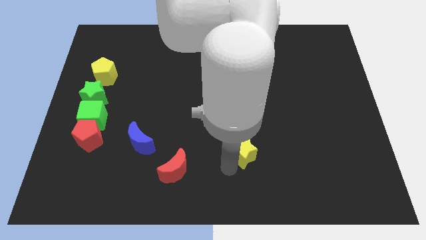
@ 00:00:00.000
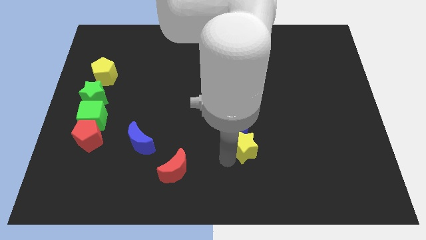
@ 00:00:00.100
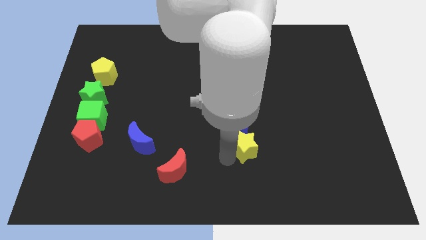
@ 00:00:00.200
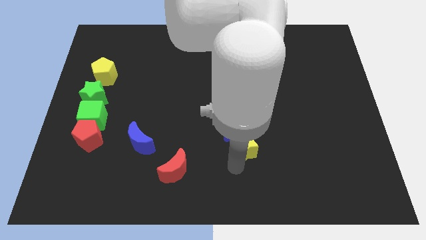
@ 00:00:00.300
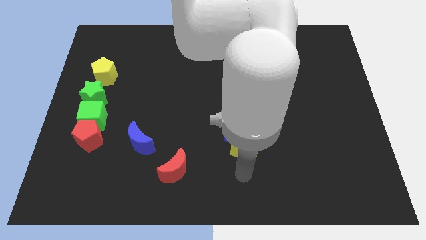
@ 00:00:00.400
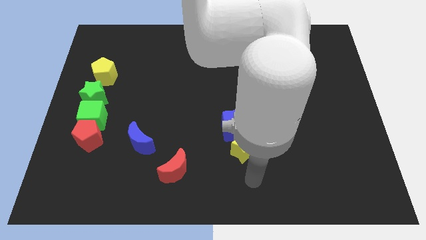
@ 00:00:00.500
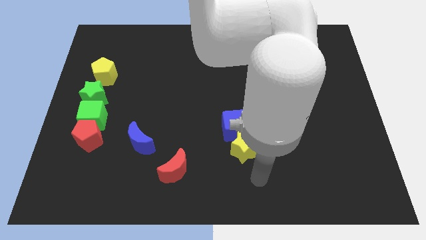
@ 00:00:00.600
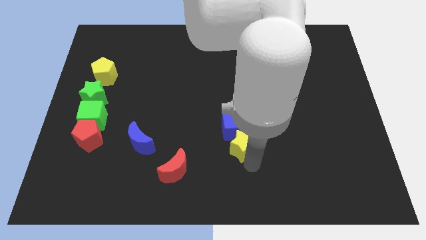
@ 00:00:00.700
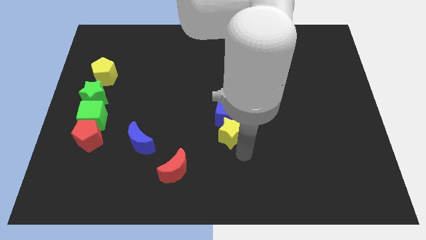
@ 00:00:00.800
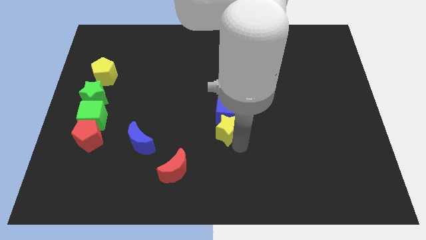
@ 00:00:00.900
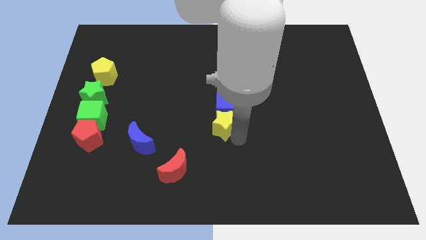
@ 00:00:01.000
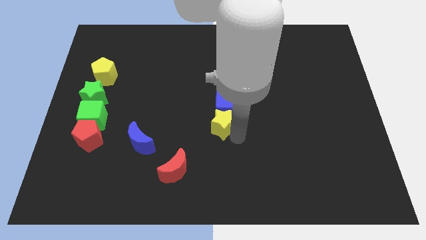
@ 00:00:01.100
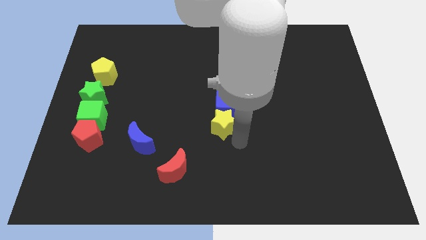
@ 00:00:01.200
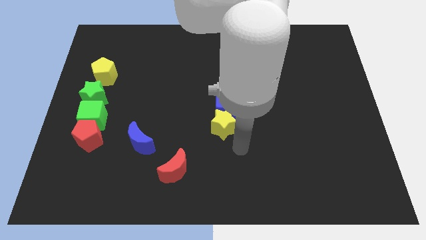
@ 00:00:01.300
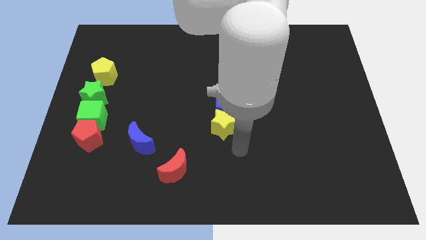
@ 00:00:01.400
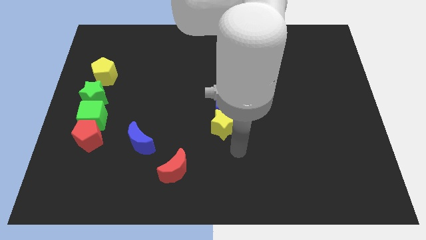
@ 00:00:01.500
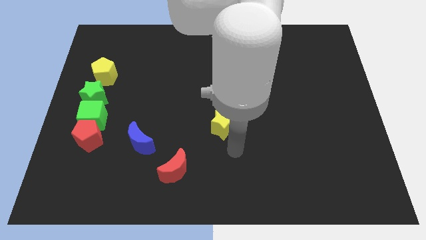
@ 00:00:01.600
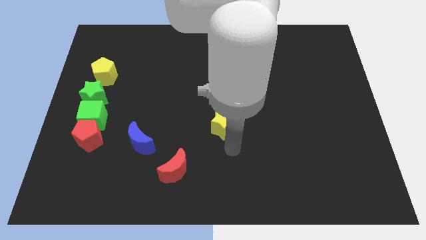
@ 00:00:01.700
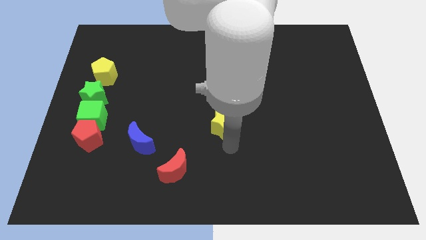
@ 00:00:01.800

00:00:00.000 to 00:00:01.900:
place blue cube and yellow star to the center of the board

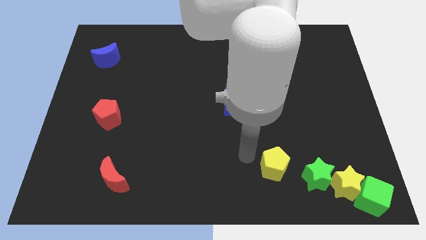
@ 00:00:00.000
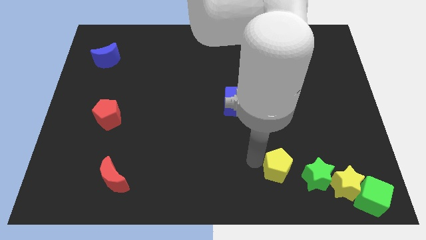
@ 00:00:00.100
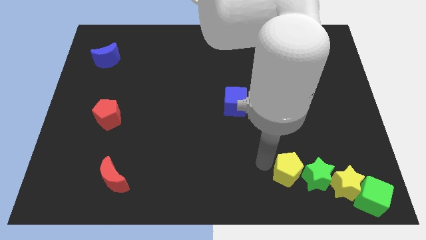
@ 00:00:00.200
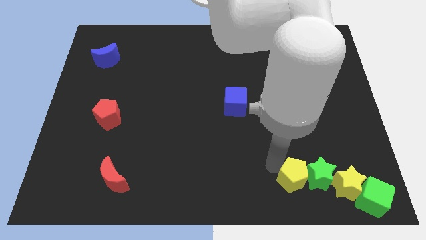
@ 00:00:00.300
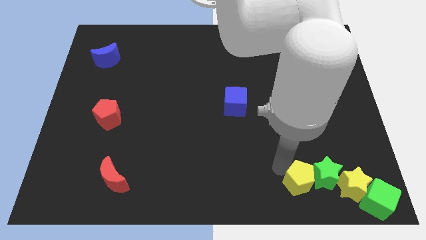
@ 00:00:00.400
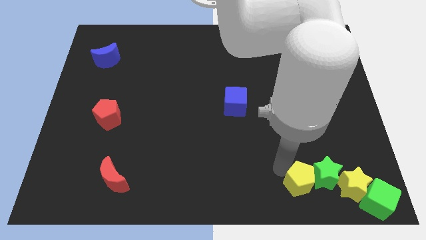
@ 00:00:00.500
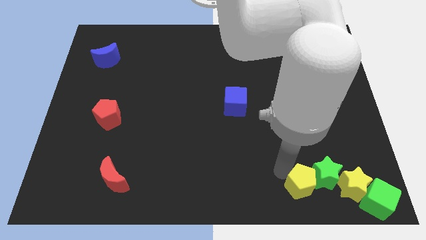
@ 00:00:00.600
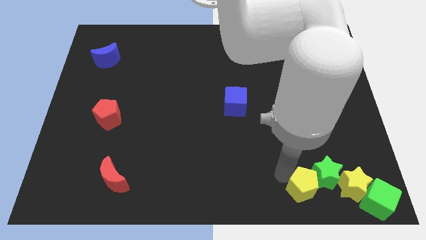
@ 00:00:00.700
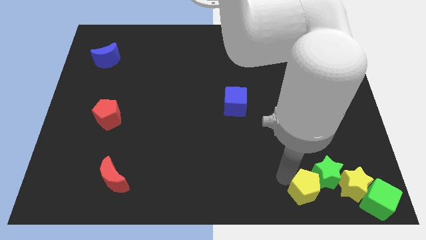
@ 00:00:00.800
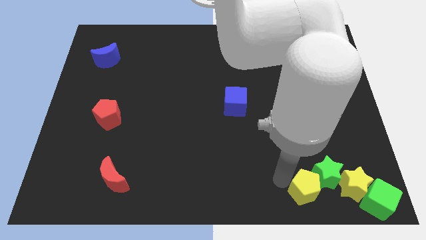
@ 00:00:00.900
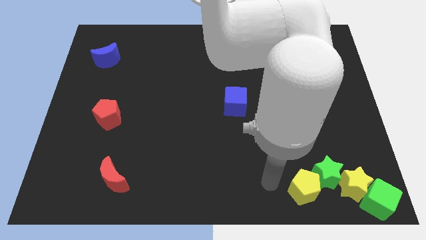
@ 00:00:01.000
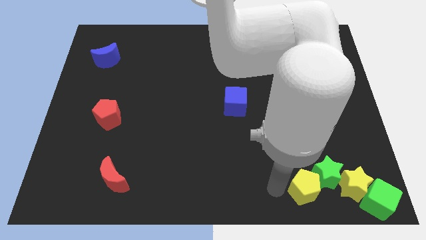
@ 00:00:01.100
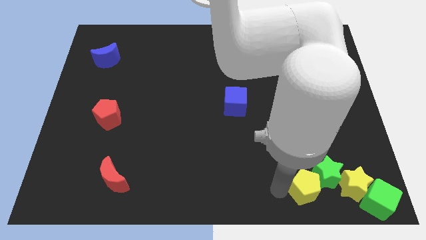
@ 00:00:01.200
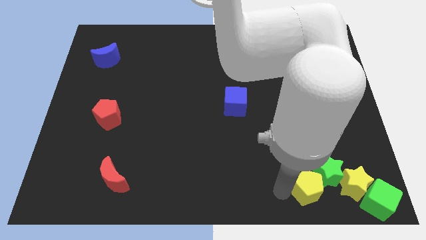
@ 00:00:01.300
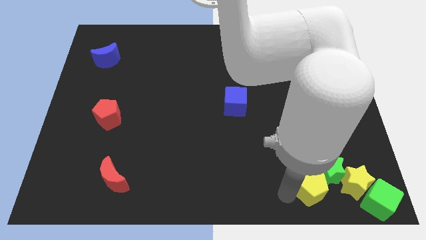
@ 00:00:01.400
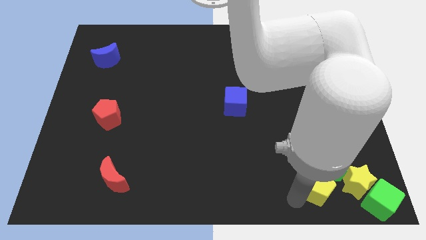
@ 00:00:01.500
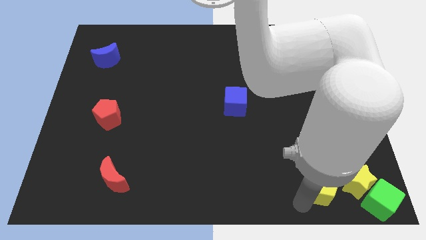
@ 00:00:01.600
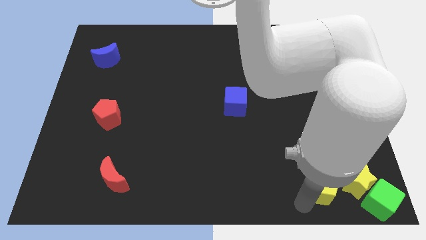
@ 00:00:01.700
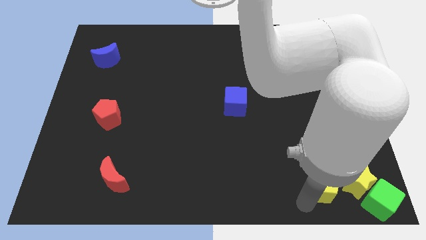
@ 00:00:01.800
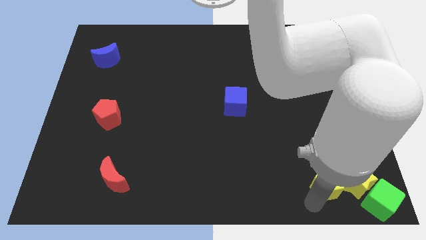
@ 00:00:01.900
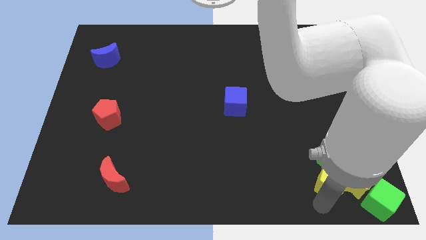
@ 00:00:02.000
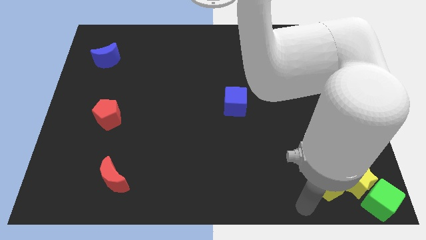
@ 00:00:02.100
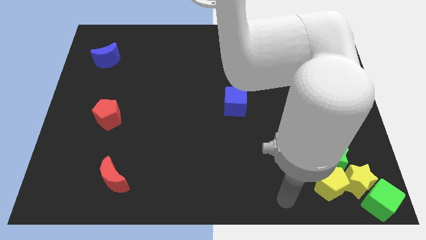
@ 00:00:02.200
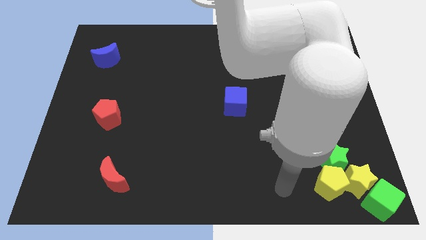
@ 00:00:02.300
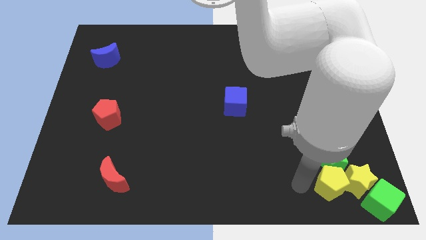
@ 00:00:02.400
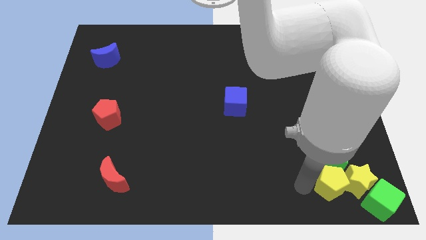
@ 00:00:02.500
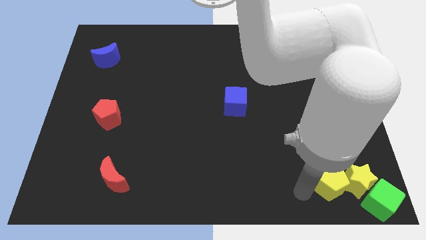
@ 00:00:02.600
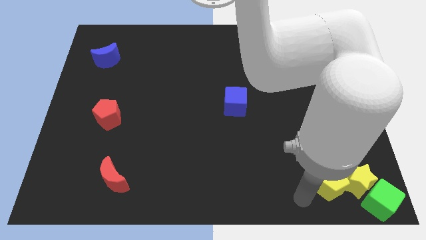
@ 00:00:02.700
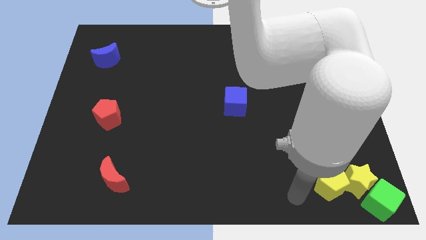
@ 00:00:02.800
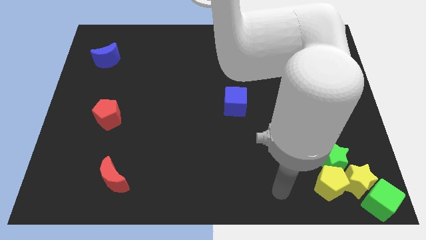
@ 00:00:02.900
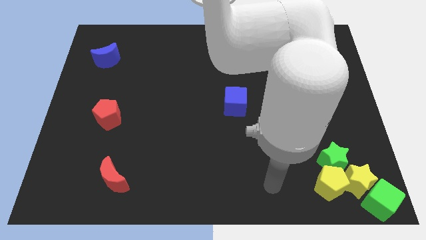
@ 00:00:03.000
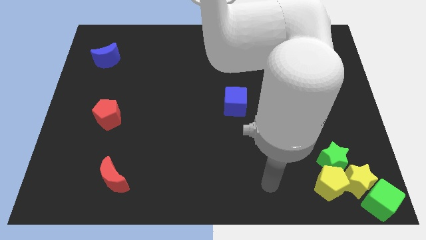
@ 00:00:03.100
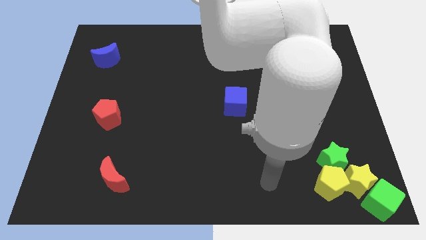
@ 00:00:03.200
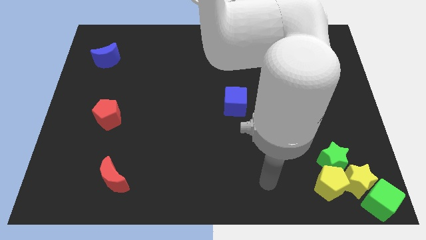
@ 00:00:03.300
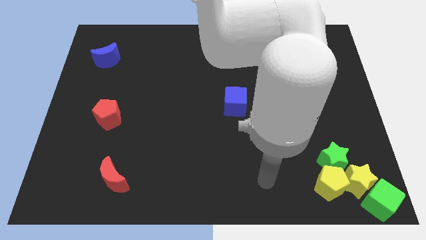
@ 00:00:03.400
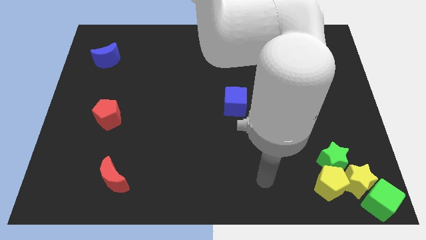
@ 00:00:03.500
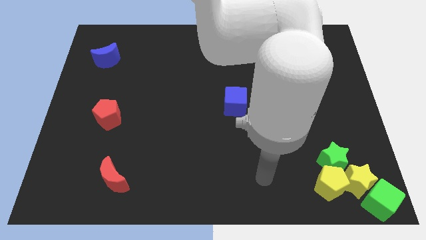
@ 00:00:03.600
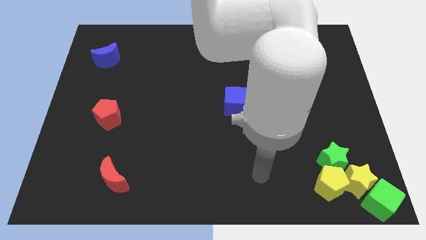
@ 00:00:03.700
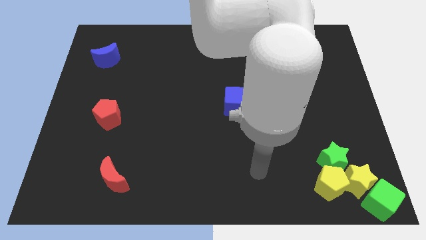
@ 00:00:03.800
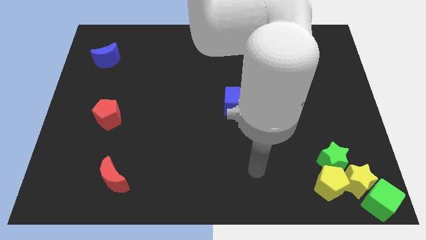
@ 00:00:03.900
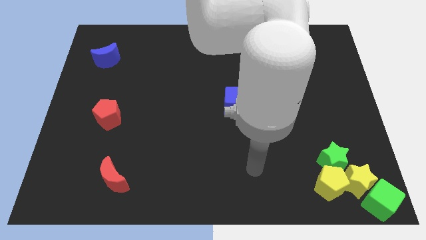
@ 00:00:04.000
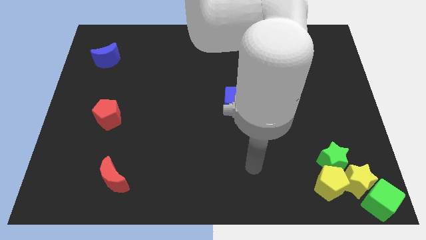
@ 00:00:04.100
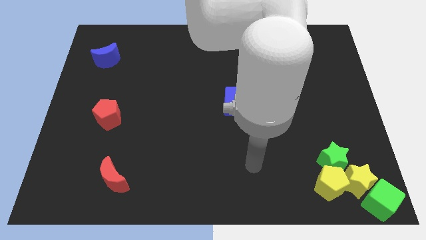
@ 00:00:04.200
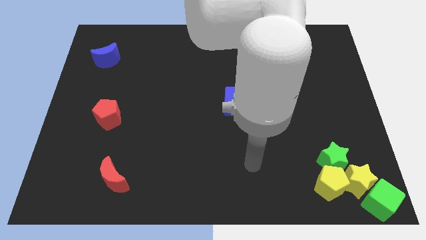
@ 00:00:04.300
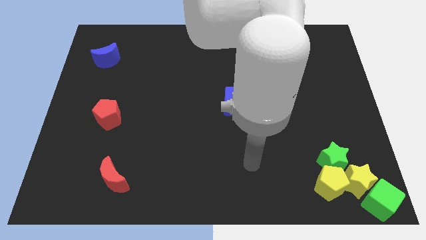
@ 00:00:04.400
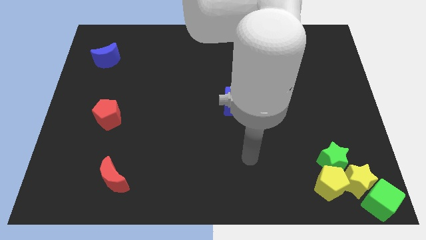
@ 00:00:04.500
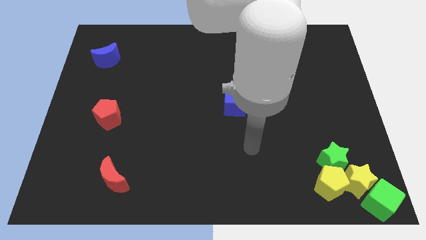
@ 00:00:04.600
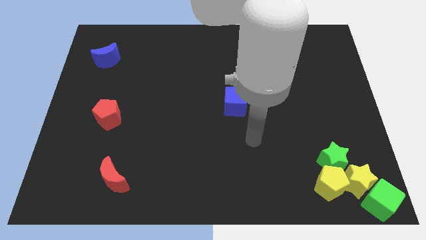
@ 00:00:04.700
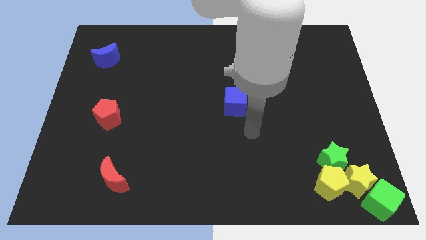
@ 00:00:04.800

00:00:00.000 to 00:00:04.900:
place the yellow pentagon below the stars

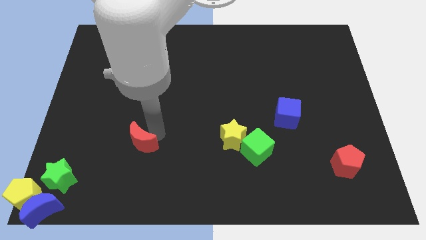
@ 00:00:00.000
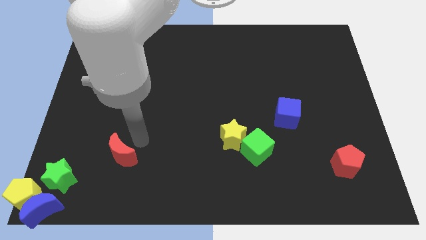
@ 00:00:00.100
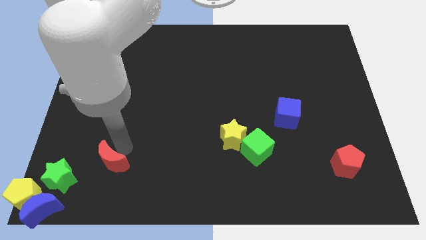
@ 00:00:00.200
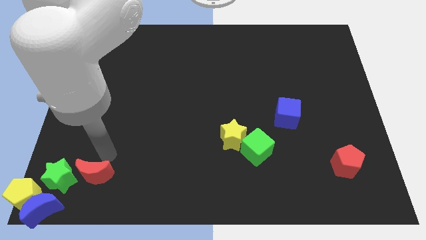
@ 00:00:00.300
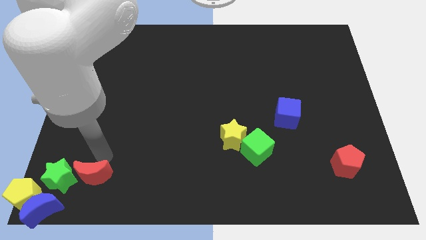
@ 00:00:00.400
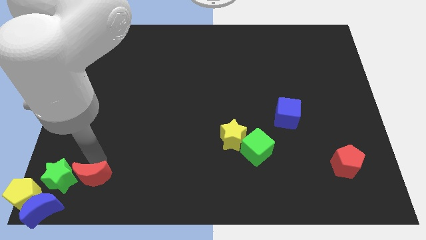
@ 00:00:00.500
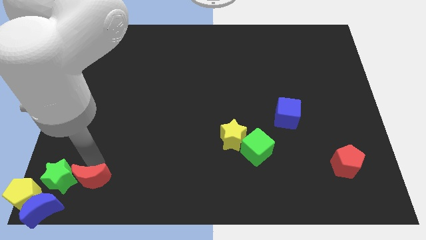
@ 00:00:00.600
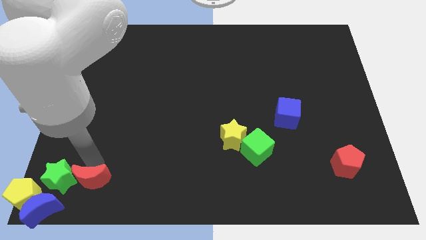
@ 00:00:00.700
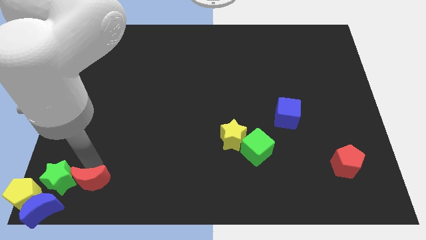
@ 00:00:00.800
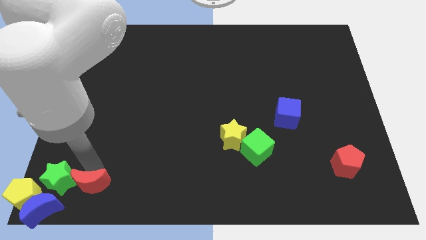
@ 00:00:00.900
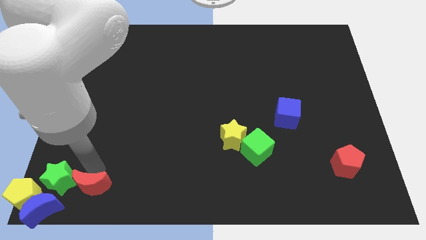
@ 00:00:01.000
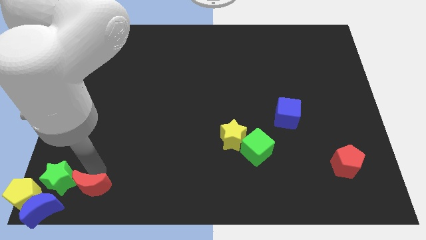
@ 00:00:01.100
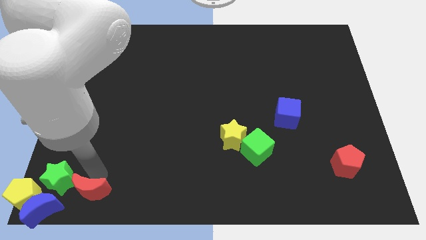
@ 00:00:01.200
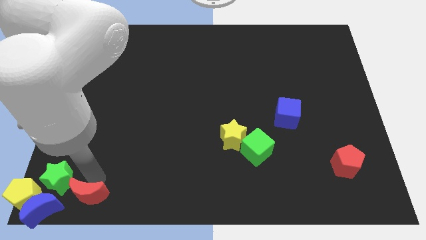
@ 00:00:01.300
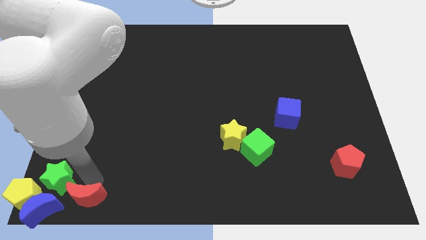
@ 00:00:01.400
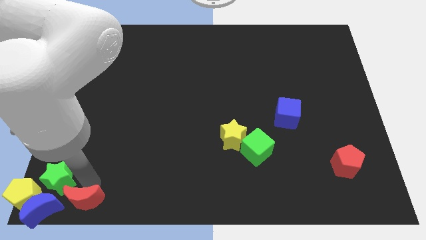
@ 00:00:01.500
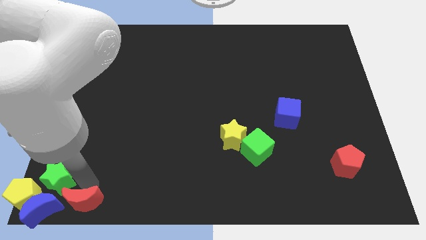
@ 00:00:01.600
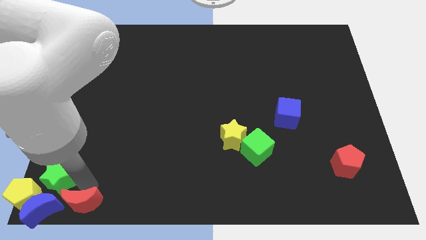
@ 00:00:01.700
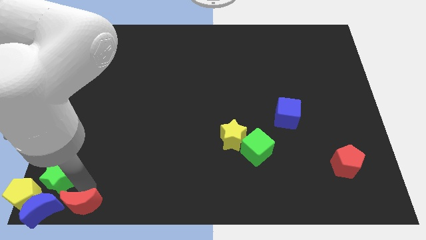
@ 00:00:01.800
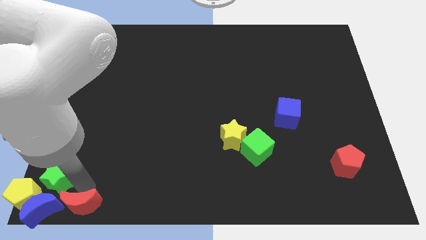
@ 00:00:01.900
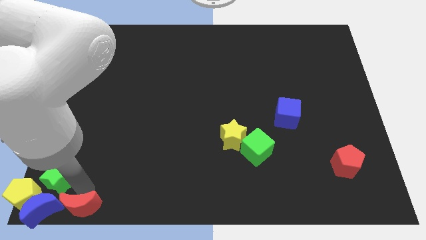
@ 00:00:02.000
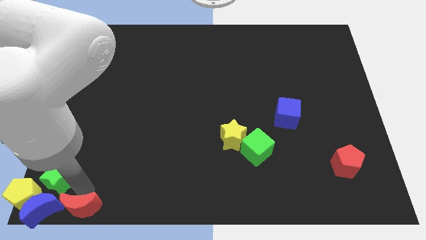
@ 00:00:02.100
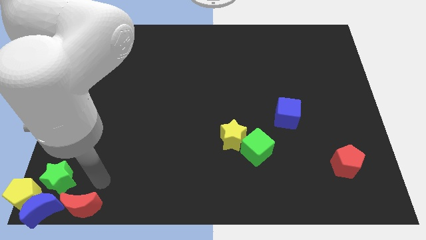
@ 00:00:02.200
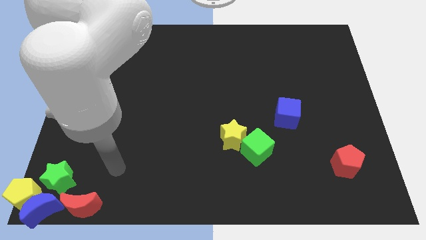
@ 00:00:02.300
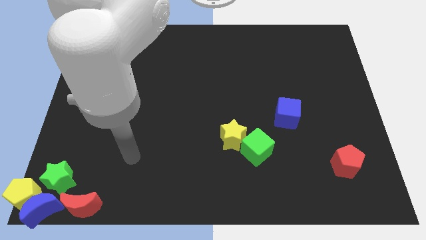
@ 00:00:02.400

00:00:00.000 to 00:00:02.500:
move the red moon to the right side of the blue moon
